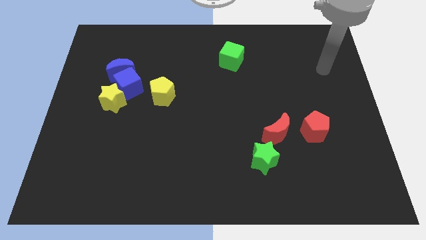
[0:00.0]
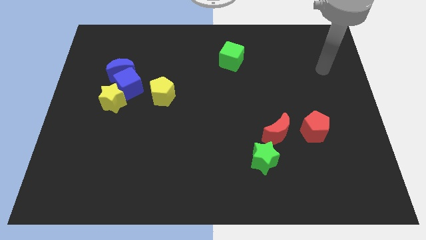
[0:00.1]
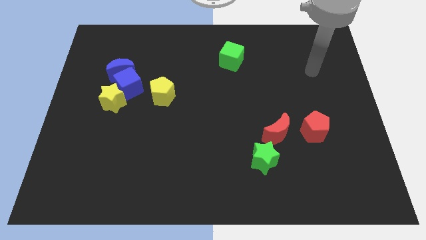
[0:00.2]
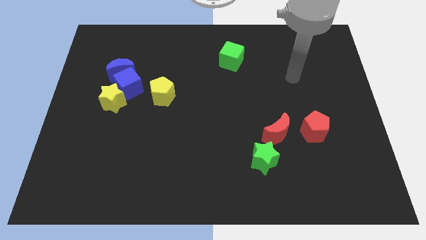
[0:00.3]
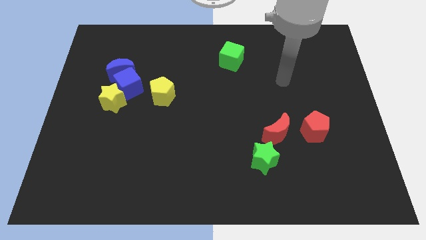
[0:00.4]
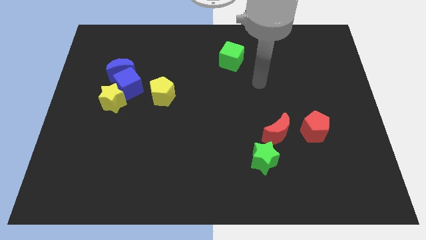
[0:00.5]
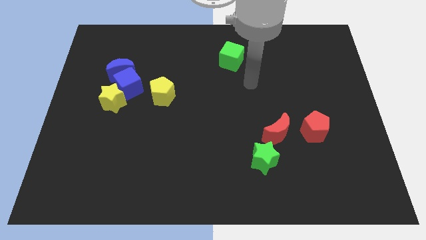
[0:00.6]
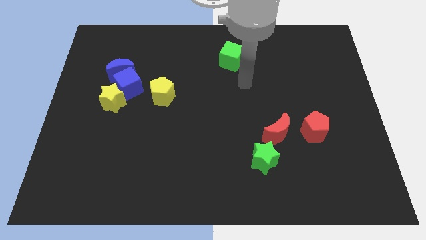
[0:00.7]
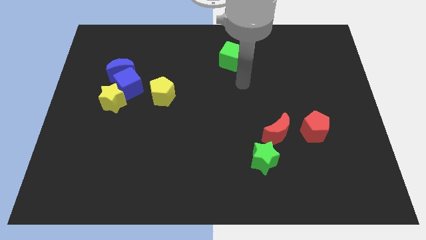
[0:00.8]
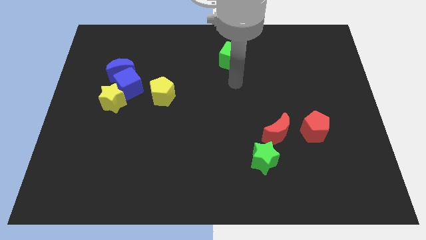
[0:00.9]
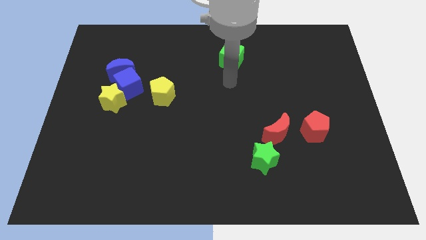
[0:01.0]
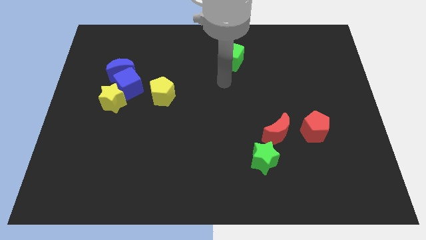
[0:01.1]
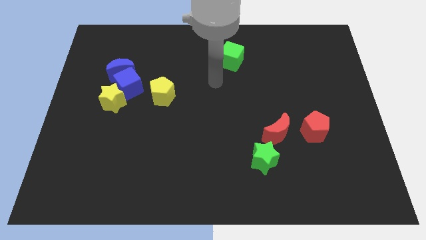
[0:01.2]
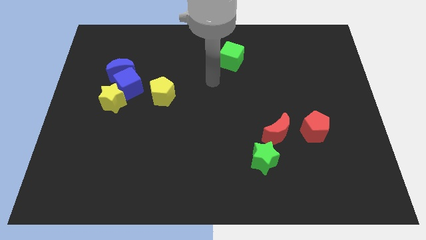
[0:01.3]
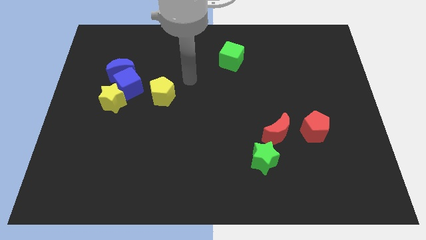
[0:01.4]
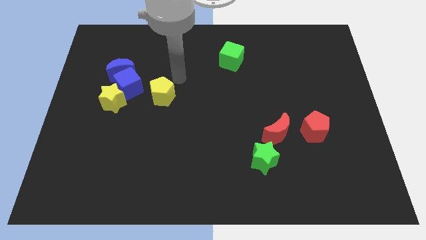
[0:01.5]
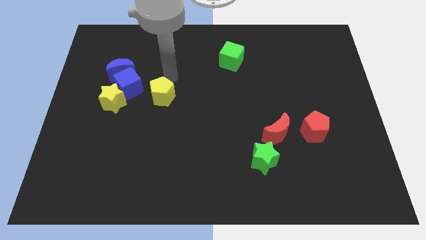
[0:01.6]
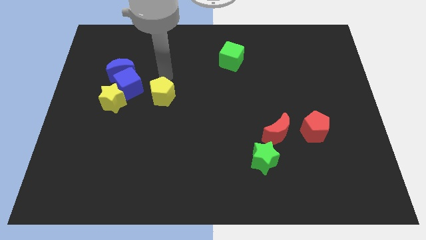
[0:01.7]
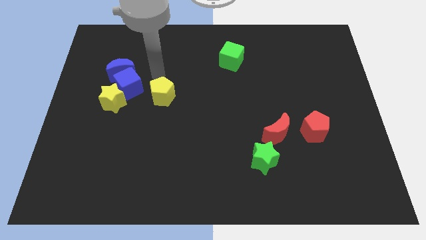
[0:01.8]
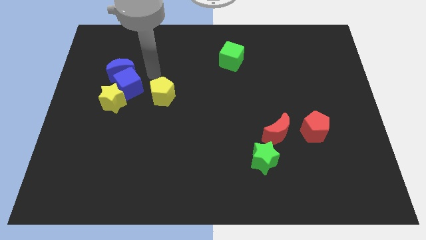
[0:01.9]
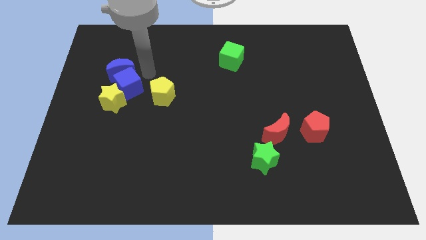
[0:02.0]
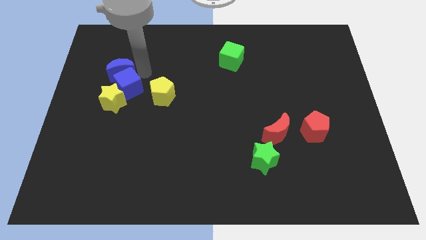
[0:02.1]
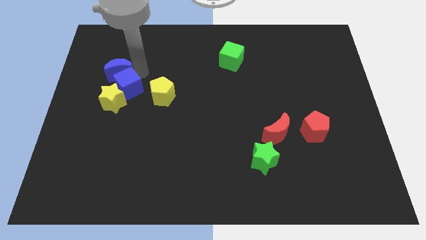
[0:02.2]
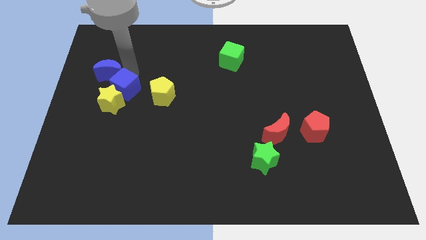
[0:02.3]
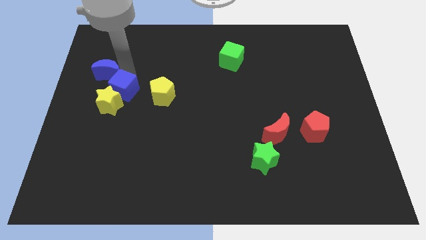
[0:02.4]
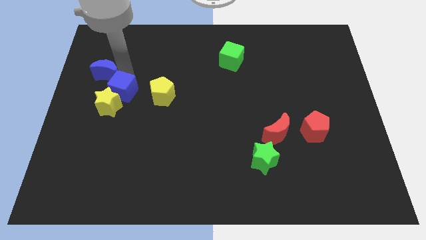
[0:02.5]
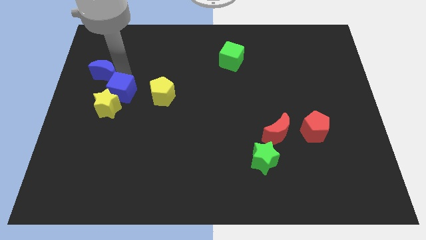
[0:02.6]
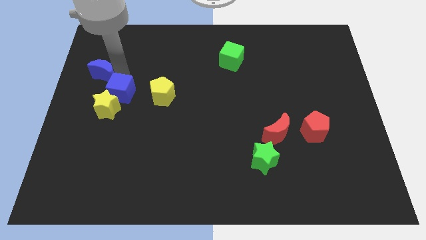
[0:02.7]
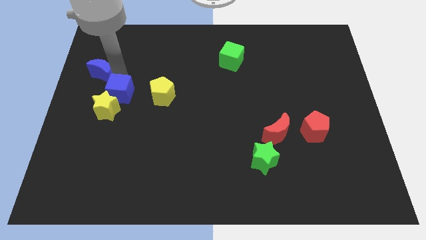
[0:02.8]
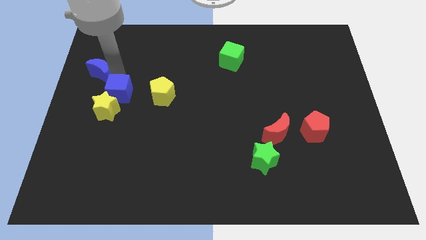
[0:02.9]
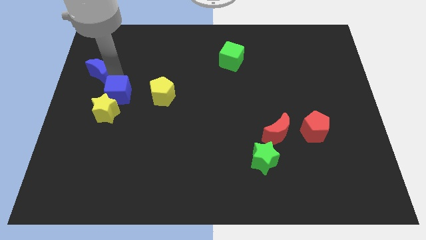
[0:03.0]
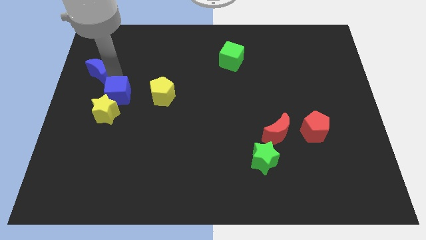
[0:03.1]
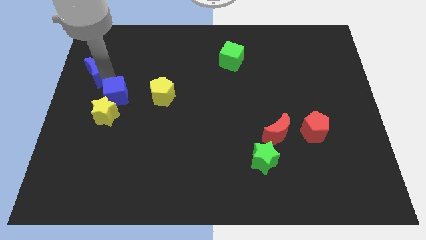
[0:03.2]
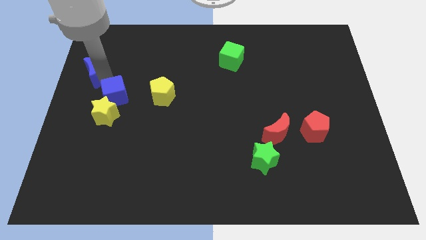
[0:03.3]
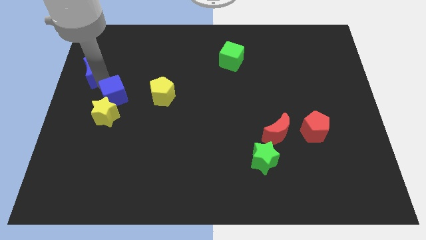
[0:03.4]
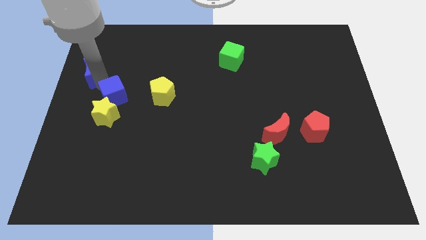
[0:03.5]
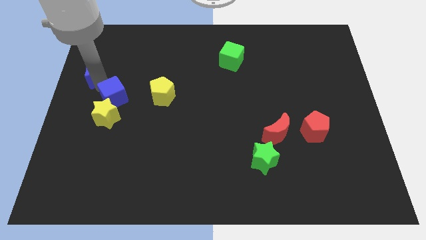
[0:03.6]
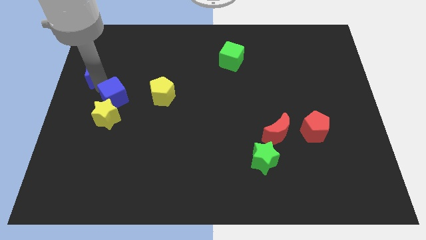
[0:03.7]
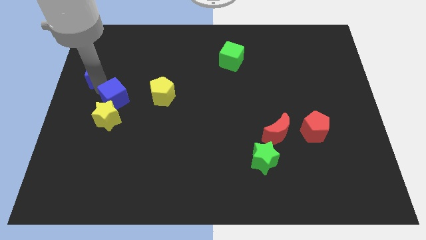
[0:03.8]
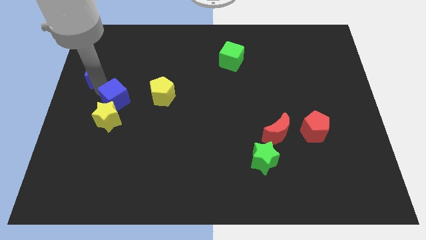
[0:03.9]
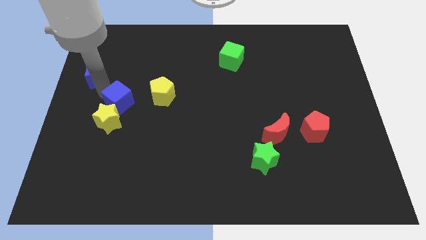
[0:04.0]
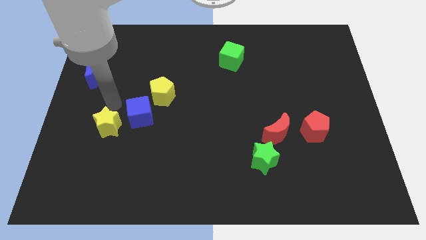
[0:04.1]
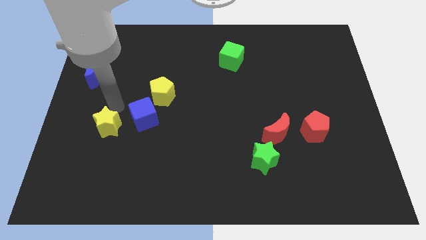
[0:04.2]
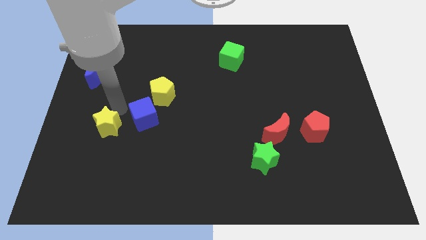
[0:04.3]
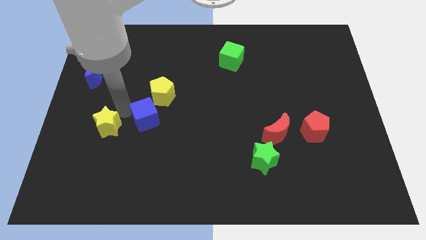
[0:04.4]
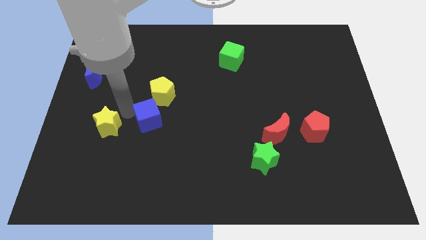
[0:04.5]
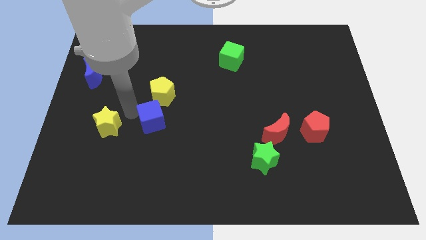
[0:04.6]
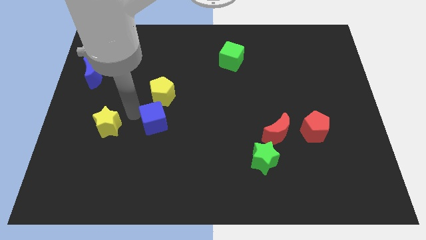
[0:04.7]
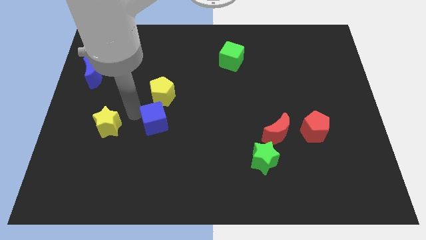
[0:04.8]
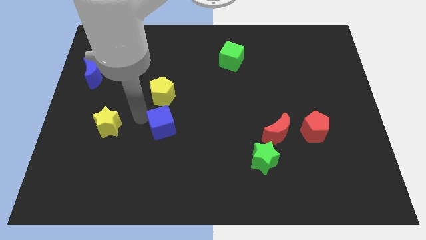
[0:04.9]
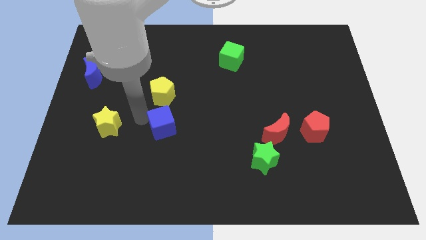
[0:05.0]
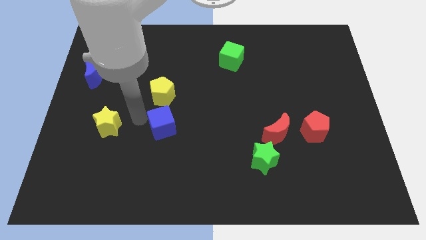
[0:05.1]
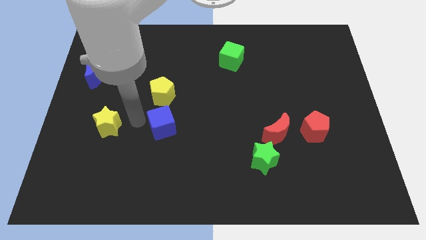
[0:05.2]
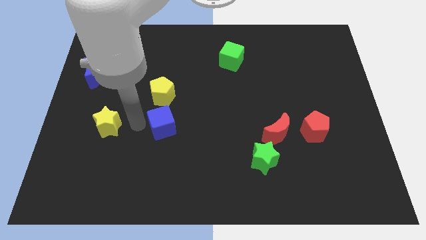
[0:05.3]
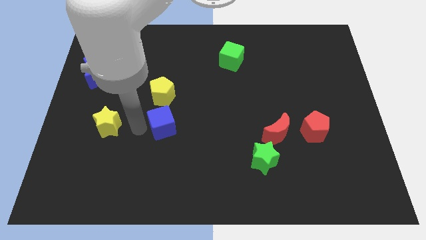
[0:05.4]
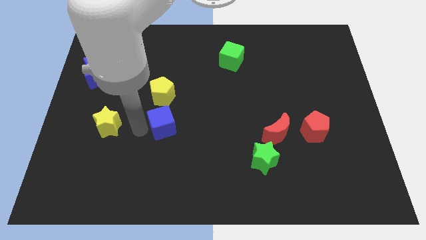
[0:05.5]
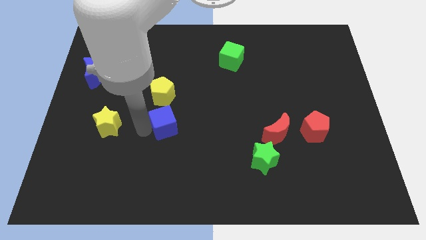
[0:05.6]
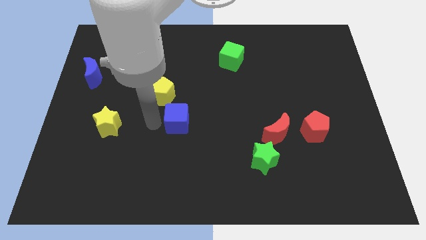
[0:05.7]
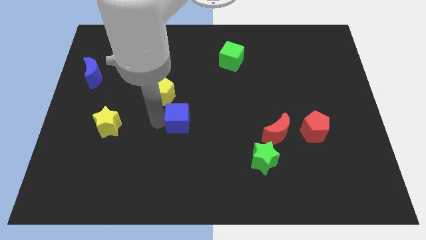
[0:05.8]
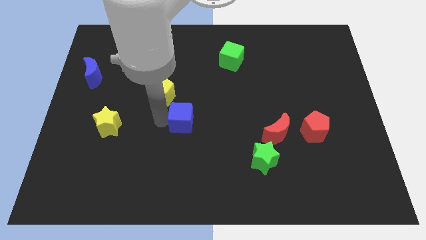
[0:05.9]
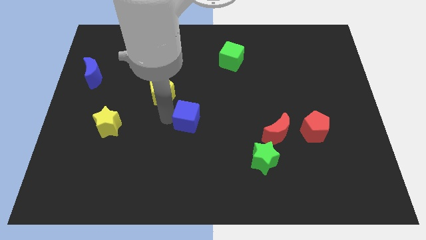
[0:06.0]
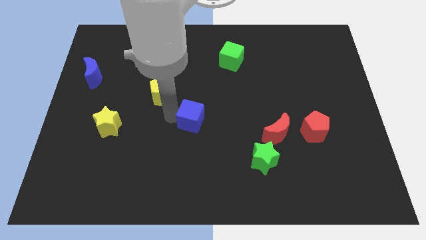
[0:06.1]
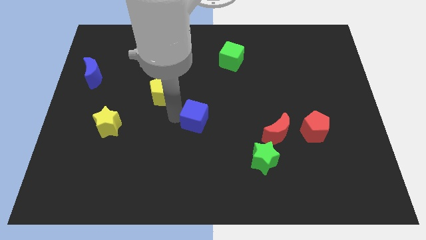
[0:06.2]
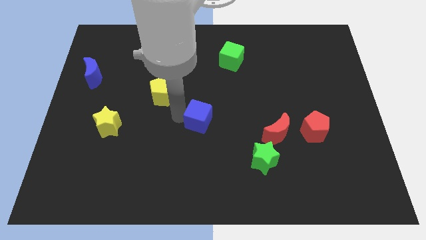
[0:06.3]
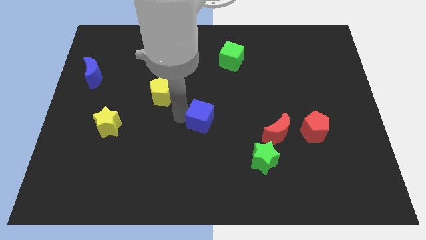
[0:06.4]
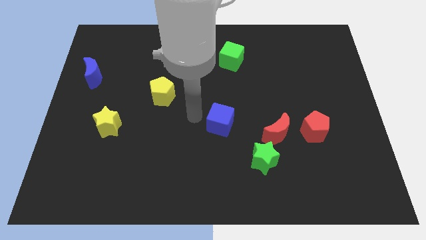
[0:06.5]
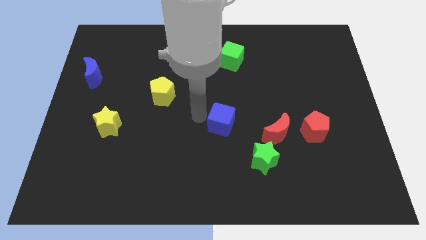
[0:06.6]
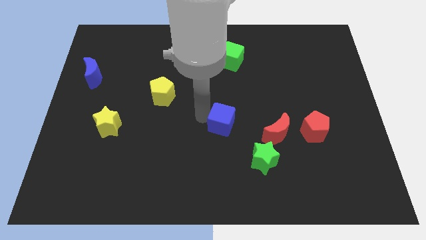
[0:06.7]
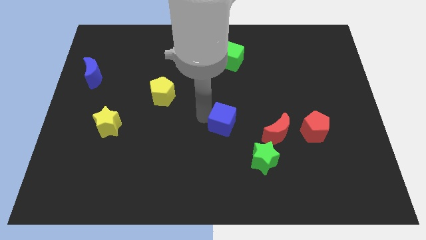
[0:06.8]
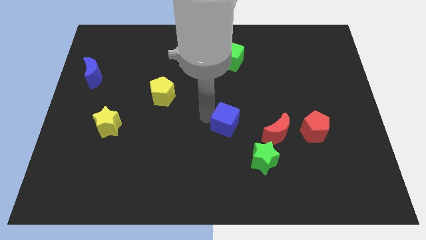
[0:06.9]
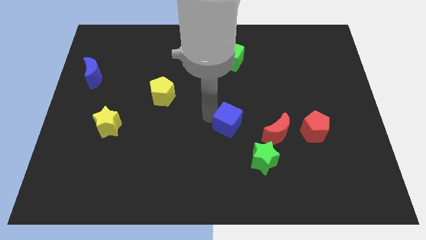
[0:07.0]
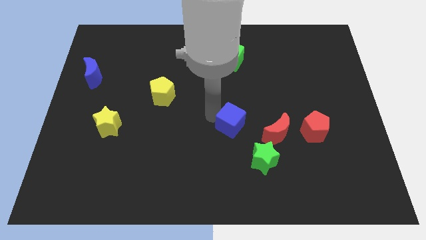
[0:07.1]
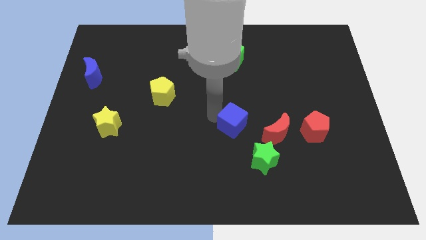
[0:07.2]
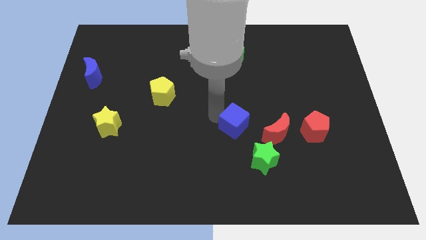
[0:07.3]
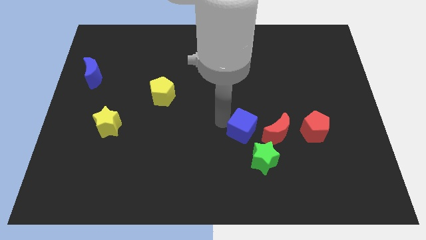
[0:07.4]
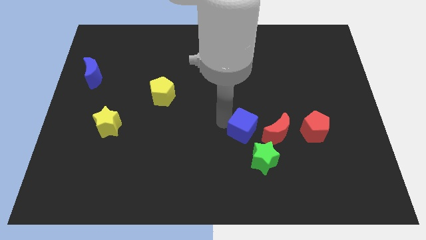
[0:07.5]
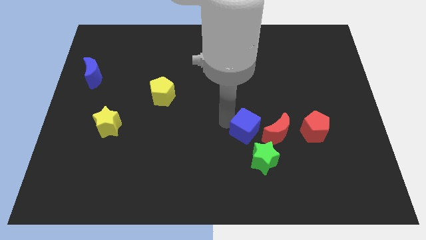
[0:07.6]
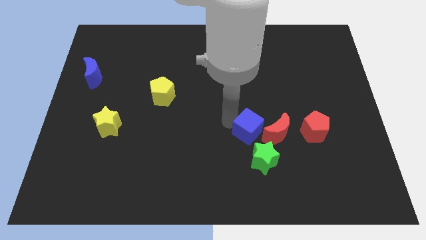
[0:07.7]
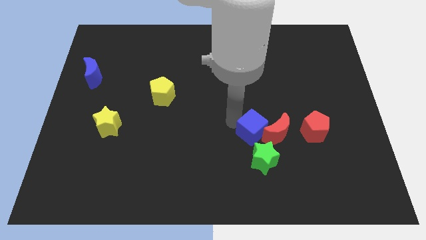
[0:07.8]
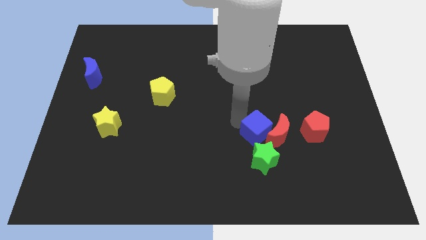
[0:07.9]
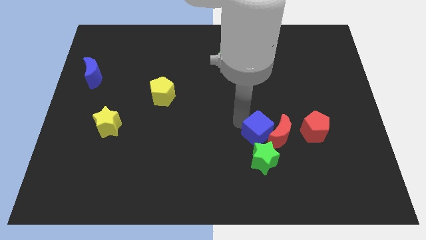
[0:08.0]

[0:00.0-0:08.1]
slide the blue cube towards the red moon

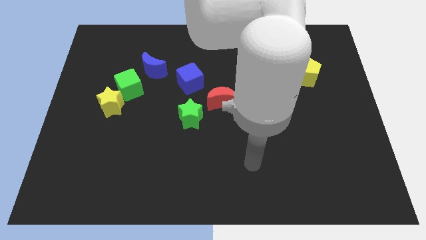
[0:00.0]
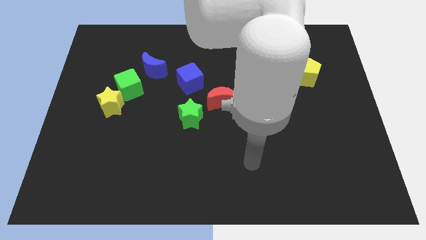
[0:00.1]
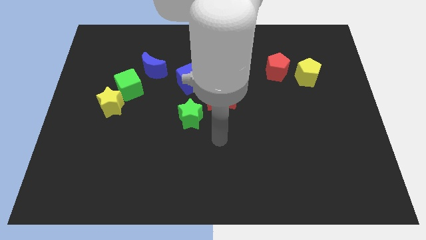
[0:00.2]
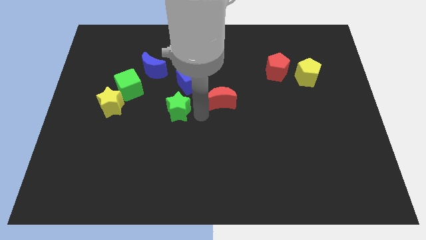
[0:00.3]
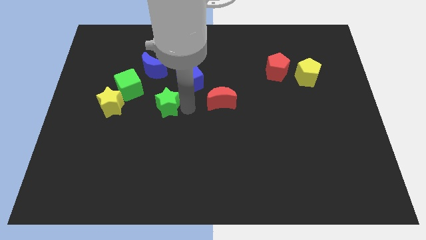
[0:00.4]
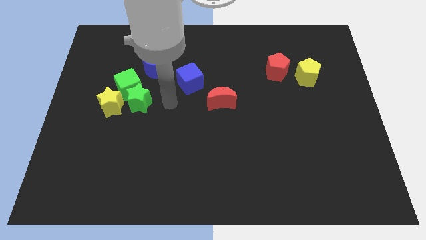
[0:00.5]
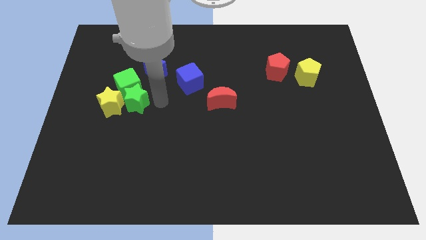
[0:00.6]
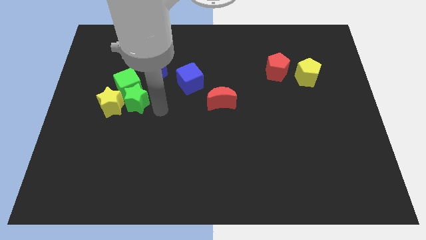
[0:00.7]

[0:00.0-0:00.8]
move the green star next to the green cube
